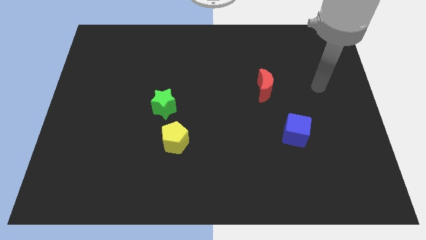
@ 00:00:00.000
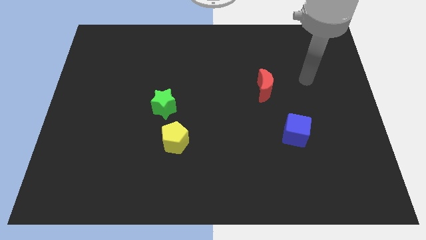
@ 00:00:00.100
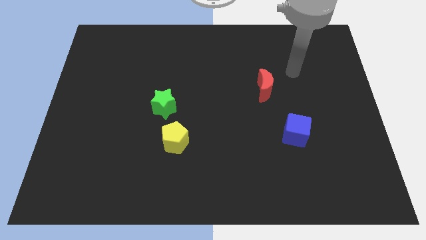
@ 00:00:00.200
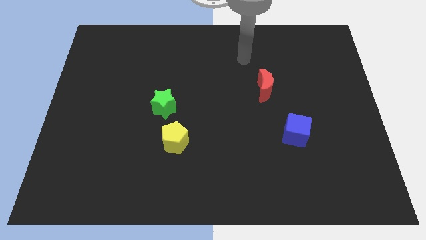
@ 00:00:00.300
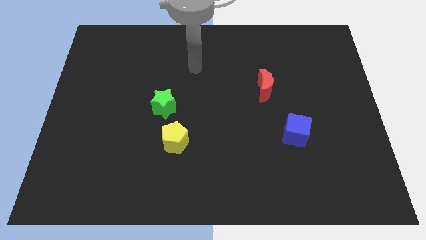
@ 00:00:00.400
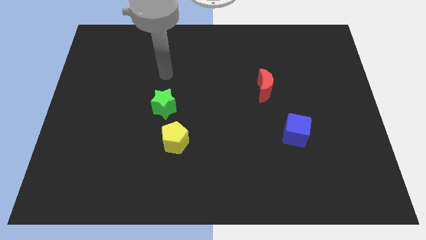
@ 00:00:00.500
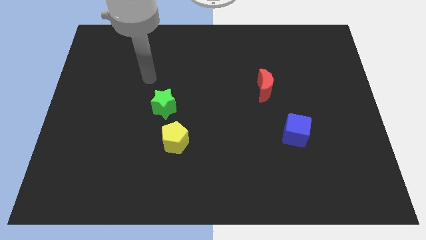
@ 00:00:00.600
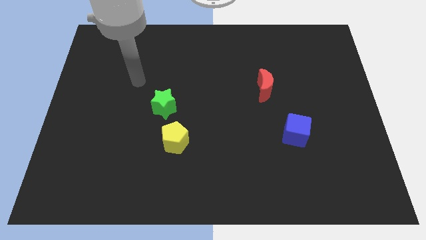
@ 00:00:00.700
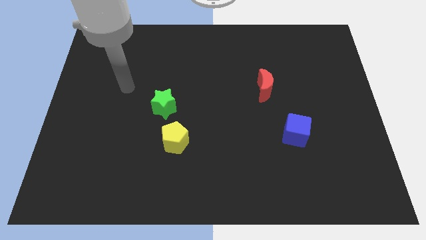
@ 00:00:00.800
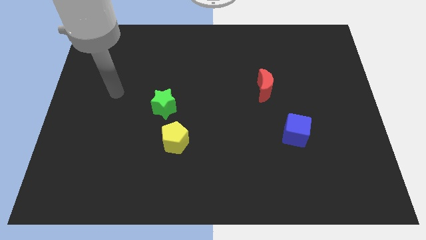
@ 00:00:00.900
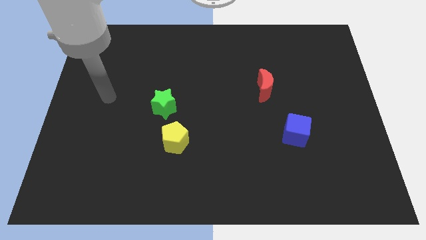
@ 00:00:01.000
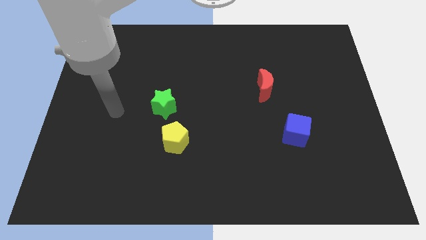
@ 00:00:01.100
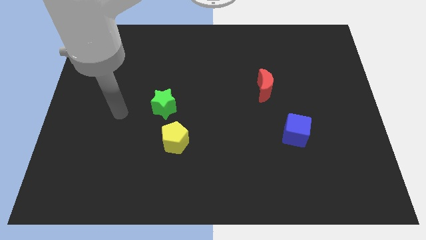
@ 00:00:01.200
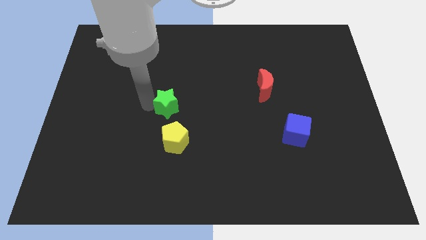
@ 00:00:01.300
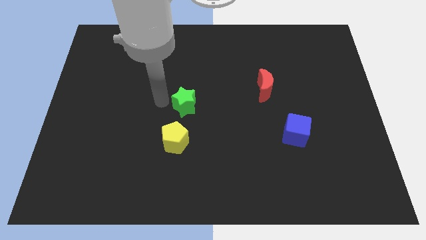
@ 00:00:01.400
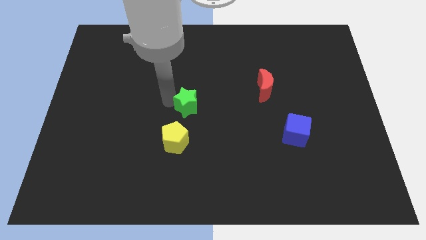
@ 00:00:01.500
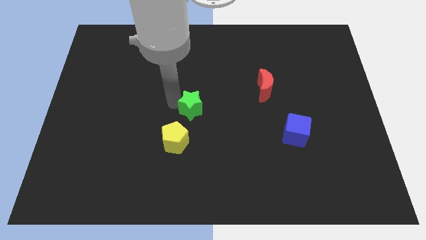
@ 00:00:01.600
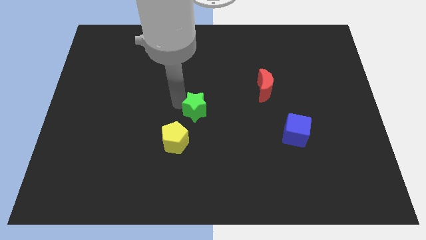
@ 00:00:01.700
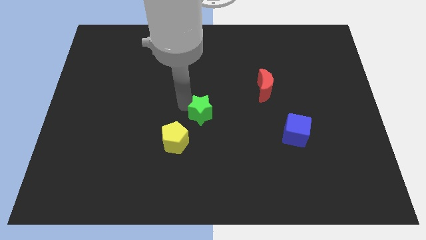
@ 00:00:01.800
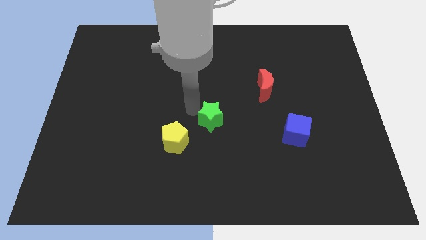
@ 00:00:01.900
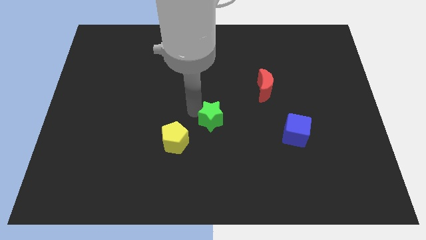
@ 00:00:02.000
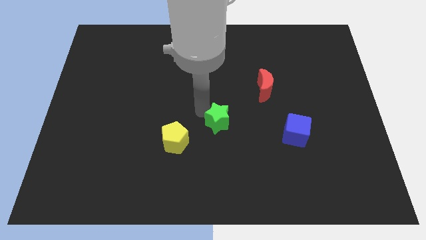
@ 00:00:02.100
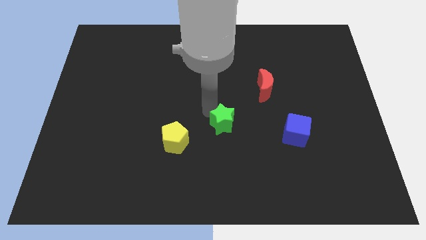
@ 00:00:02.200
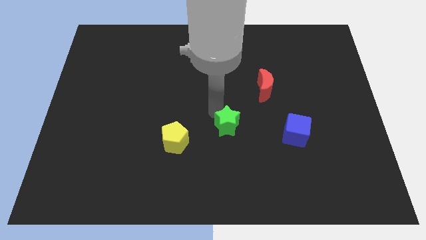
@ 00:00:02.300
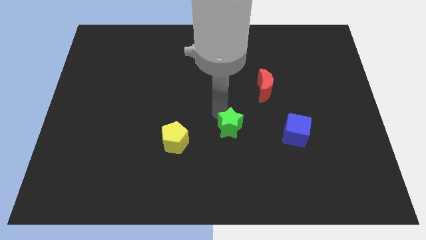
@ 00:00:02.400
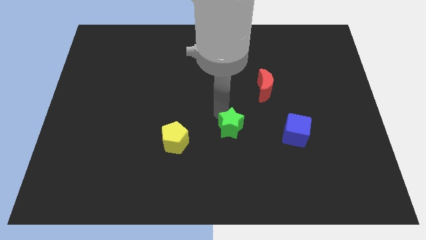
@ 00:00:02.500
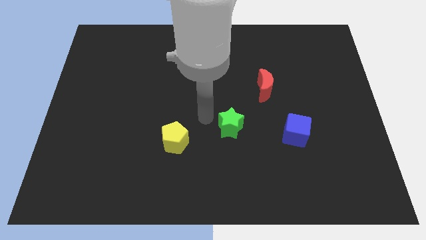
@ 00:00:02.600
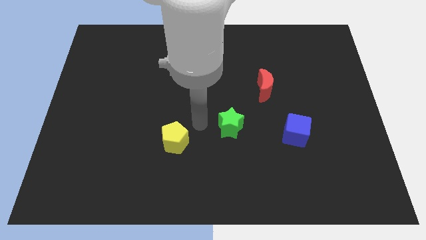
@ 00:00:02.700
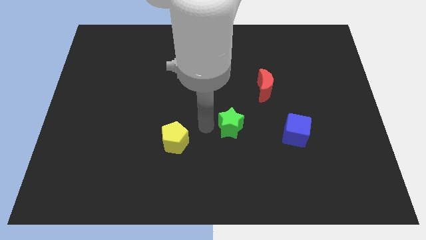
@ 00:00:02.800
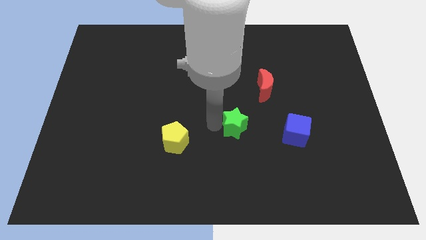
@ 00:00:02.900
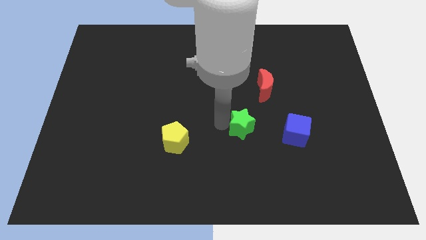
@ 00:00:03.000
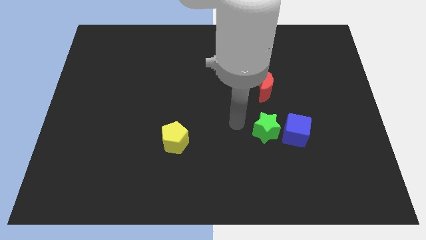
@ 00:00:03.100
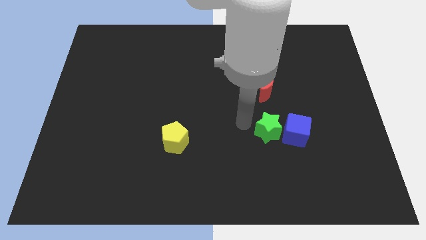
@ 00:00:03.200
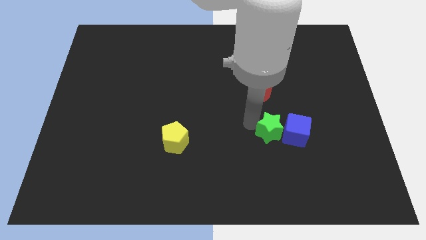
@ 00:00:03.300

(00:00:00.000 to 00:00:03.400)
slide the green block next to the cube

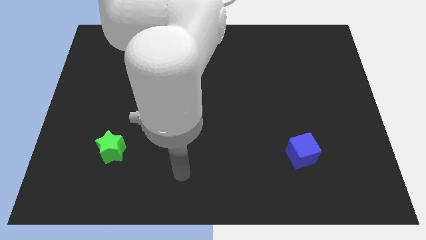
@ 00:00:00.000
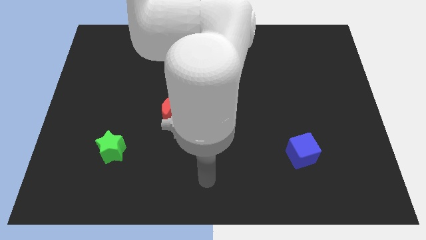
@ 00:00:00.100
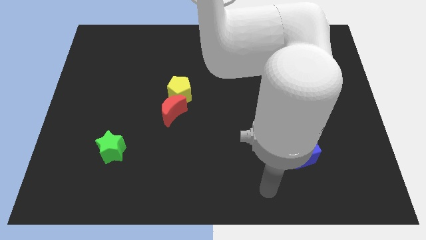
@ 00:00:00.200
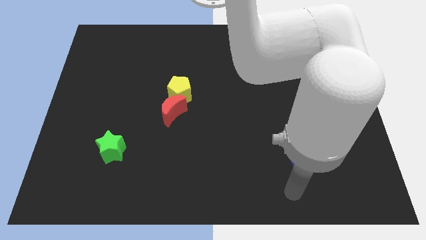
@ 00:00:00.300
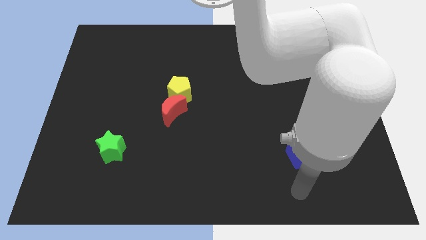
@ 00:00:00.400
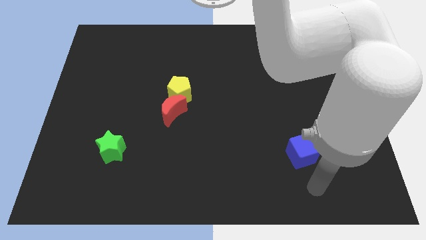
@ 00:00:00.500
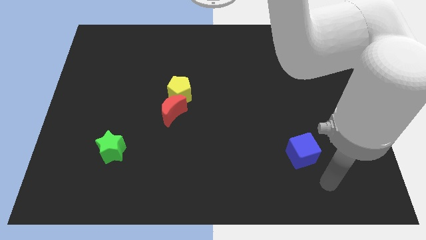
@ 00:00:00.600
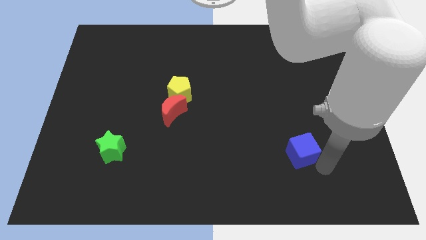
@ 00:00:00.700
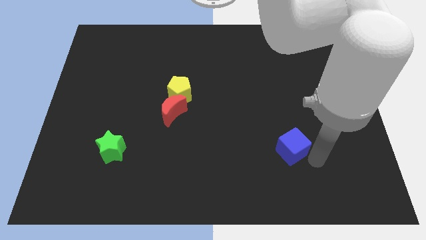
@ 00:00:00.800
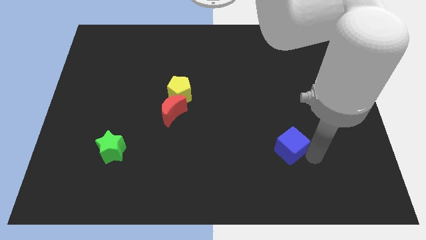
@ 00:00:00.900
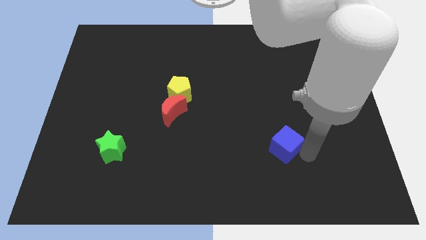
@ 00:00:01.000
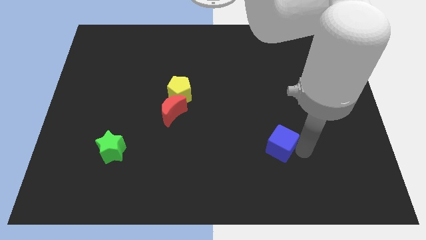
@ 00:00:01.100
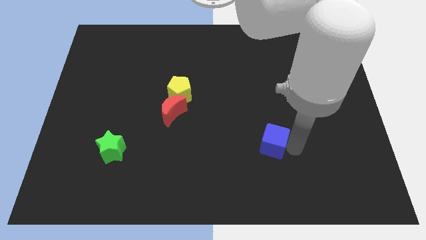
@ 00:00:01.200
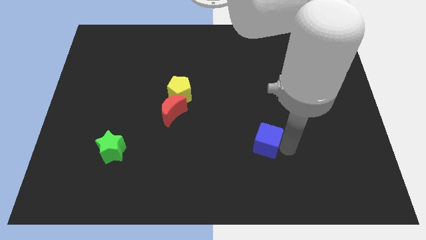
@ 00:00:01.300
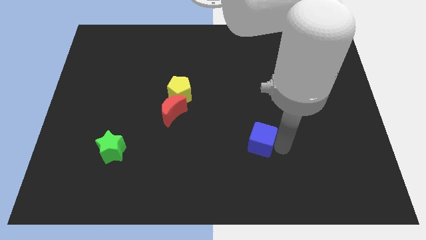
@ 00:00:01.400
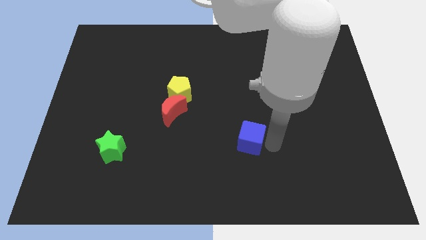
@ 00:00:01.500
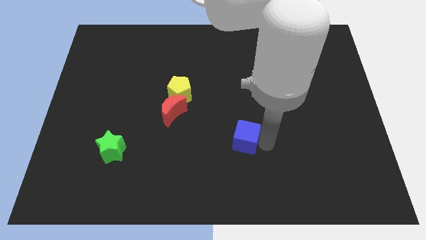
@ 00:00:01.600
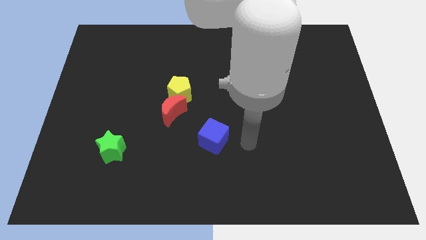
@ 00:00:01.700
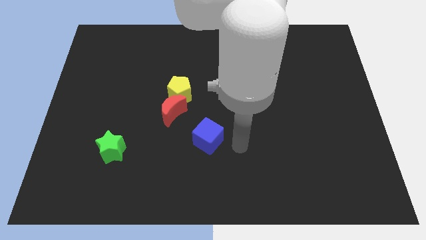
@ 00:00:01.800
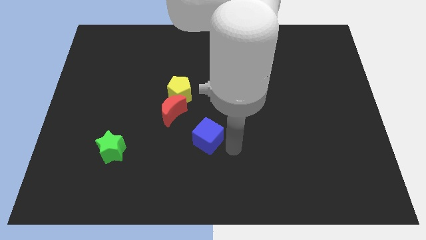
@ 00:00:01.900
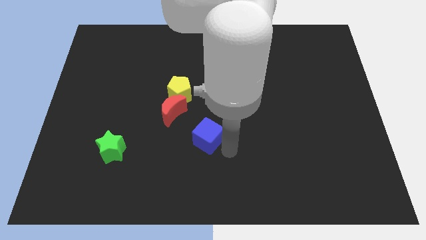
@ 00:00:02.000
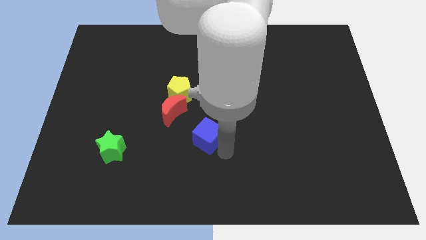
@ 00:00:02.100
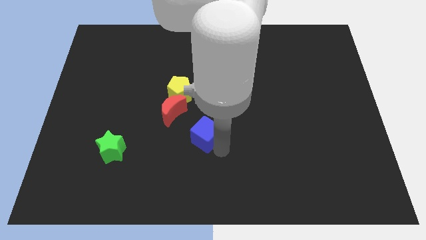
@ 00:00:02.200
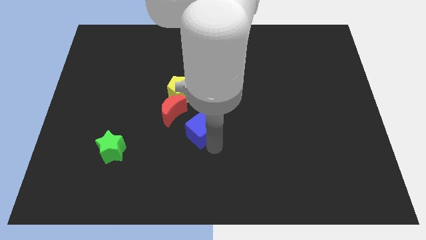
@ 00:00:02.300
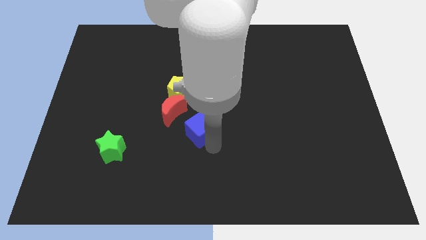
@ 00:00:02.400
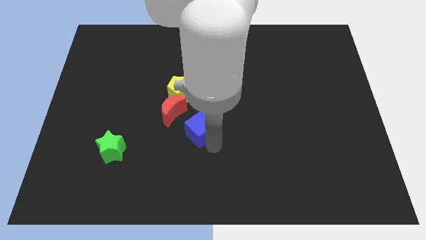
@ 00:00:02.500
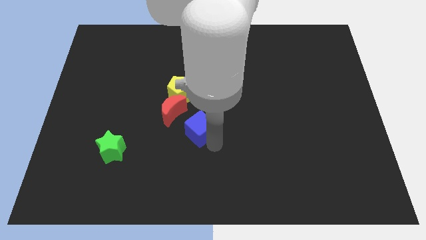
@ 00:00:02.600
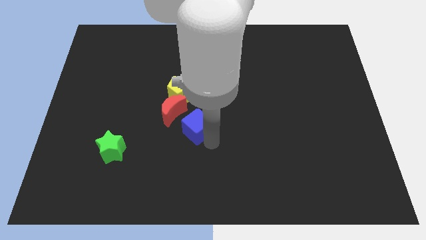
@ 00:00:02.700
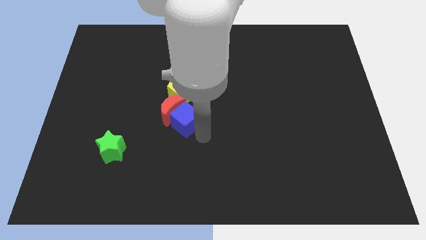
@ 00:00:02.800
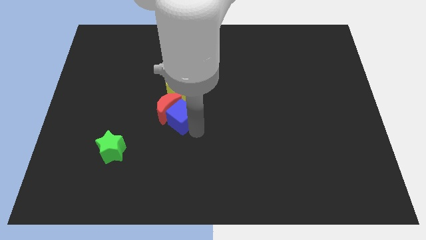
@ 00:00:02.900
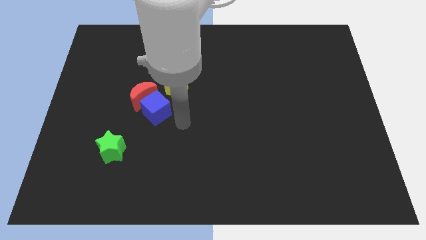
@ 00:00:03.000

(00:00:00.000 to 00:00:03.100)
move the blue cube to the red block

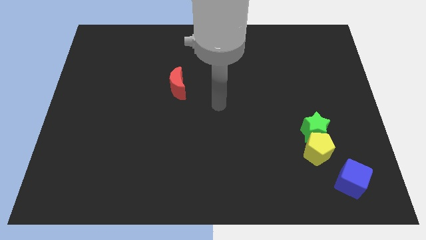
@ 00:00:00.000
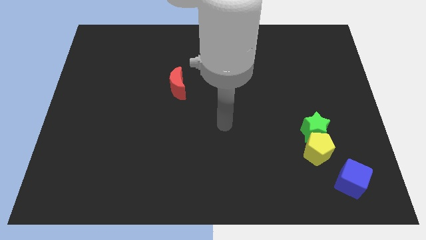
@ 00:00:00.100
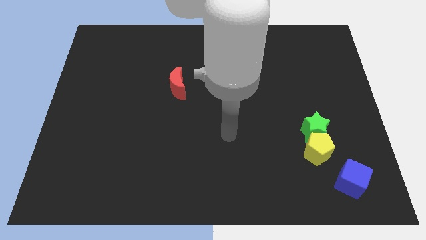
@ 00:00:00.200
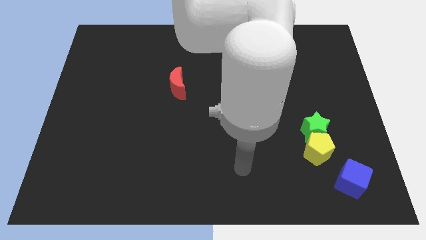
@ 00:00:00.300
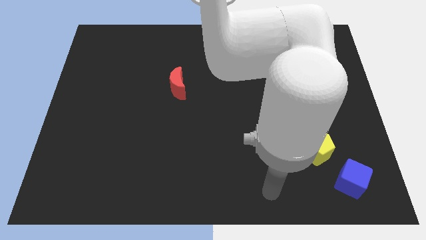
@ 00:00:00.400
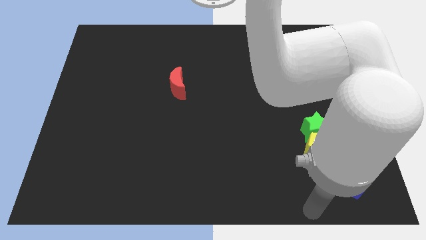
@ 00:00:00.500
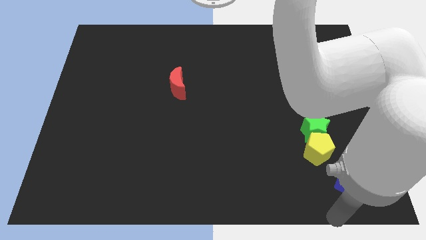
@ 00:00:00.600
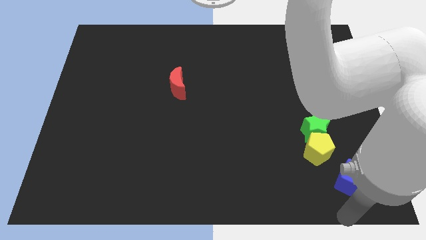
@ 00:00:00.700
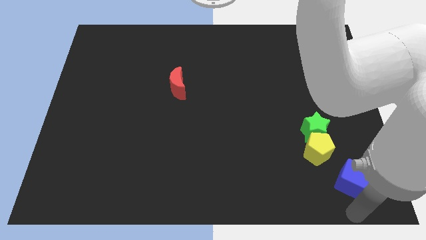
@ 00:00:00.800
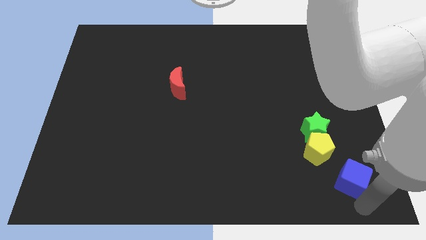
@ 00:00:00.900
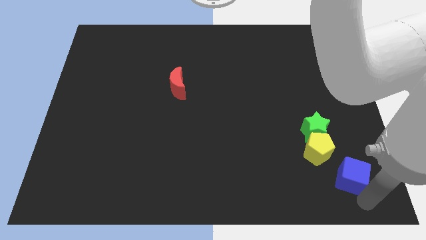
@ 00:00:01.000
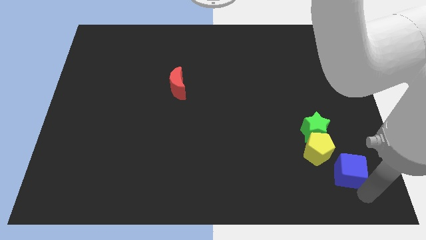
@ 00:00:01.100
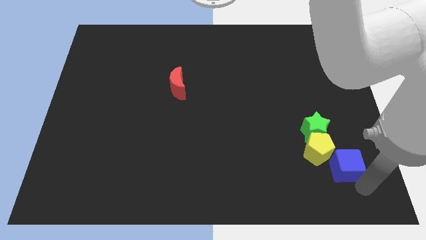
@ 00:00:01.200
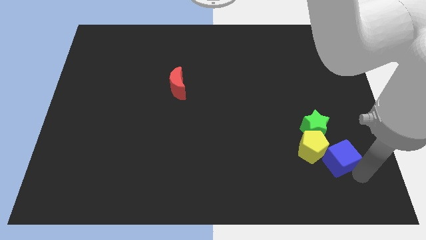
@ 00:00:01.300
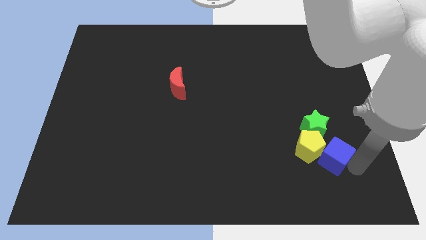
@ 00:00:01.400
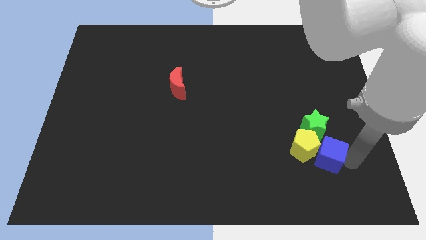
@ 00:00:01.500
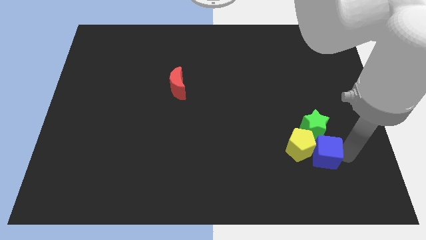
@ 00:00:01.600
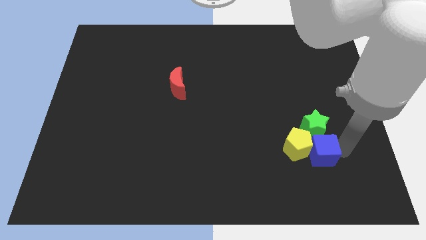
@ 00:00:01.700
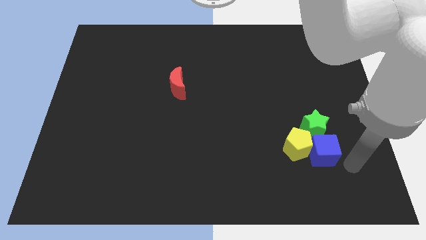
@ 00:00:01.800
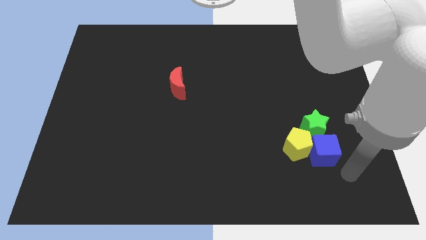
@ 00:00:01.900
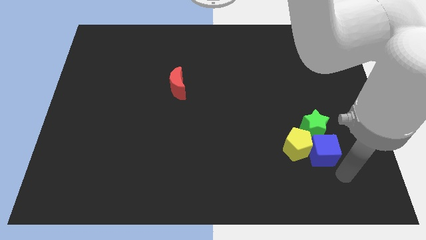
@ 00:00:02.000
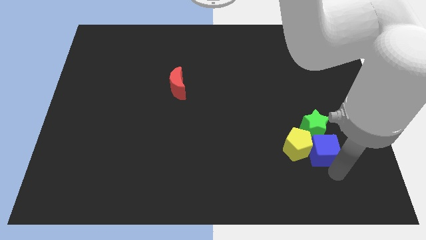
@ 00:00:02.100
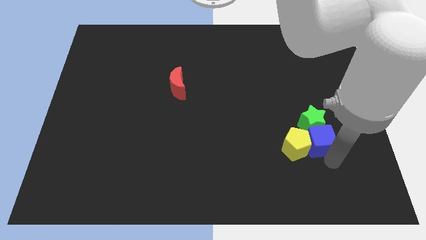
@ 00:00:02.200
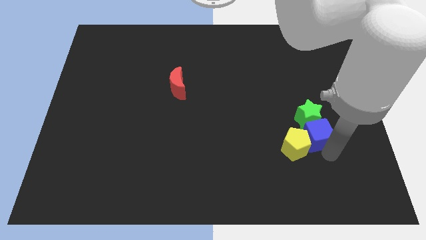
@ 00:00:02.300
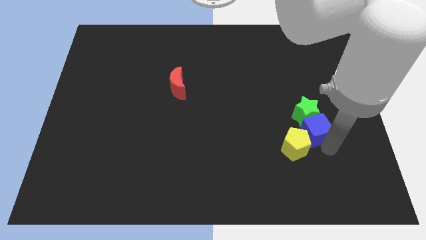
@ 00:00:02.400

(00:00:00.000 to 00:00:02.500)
move the blue block to the star
